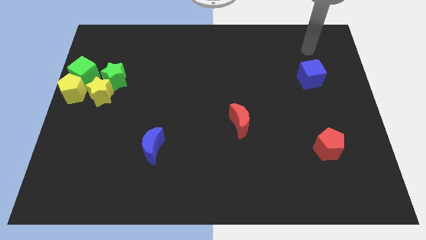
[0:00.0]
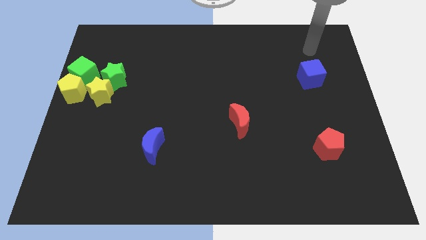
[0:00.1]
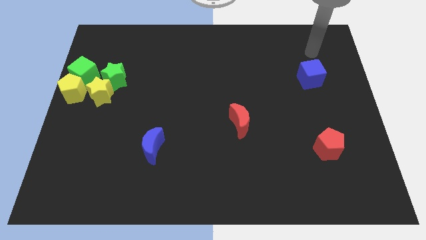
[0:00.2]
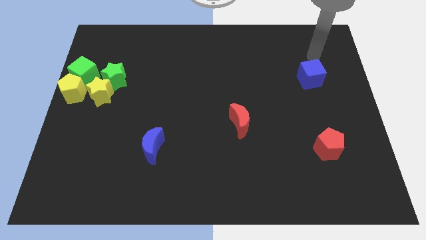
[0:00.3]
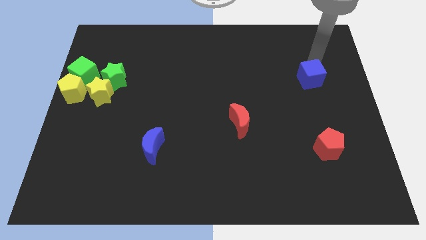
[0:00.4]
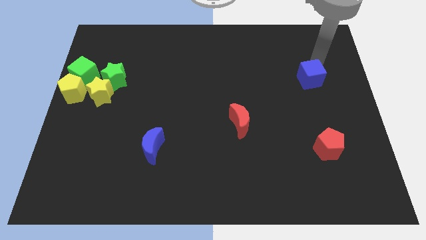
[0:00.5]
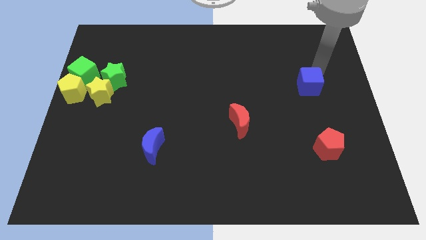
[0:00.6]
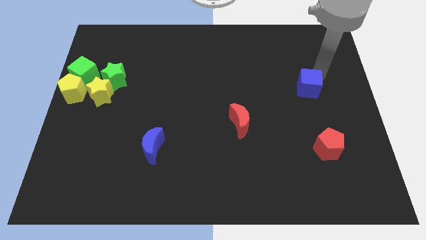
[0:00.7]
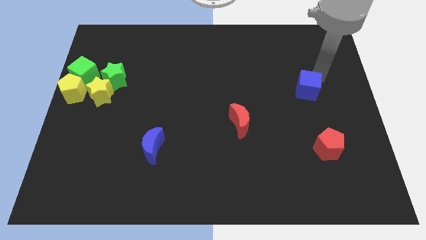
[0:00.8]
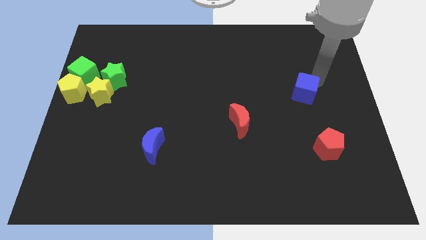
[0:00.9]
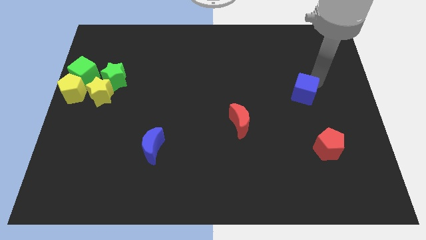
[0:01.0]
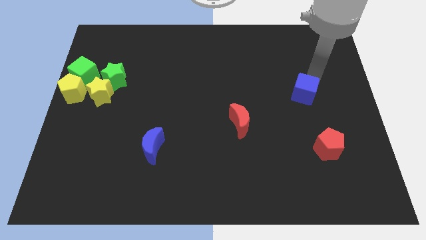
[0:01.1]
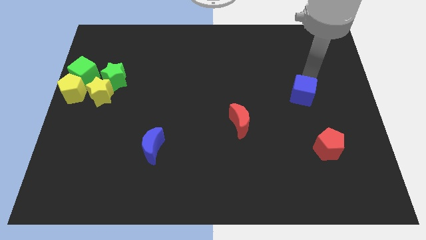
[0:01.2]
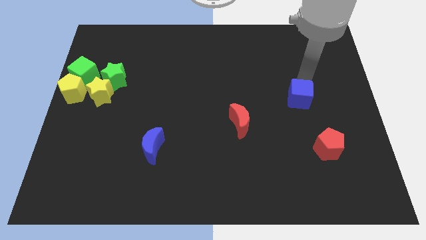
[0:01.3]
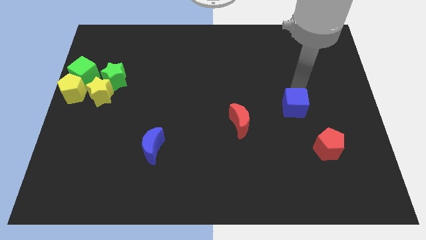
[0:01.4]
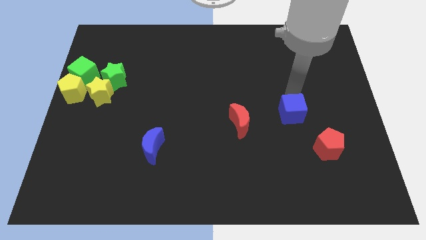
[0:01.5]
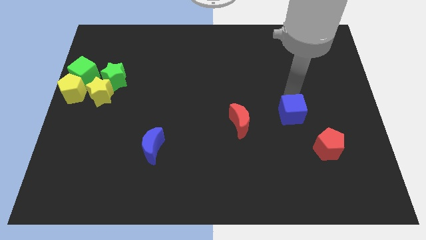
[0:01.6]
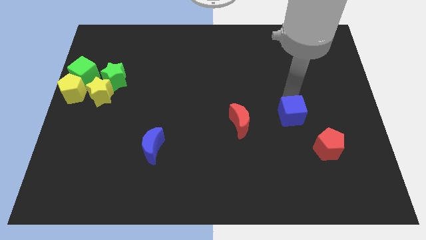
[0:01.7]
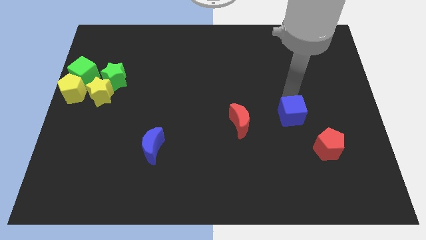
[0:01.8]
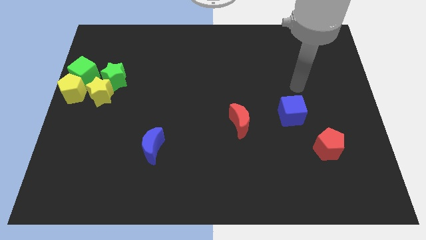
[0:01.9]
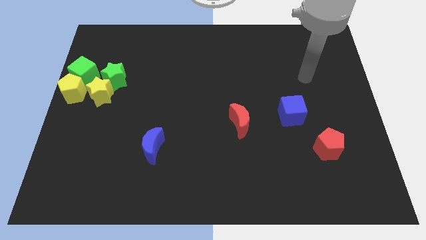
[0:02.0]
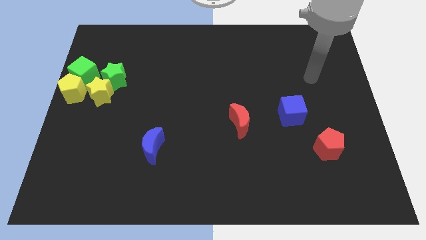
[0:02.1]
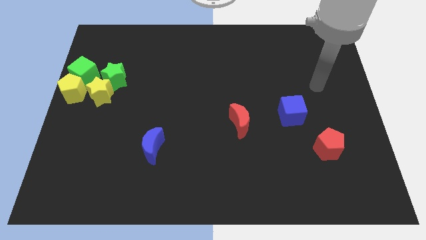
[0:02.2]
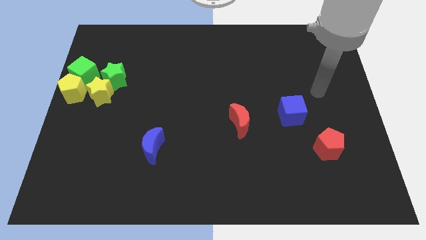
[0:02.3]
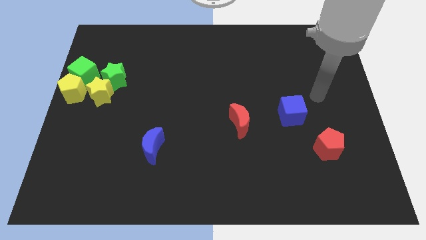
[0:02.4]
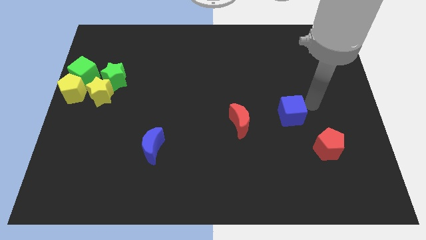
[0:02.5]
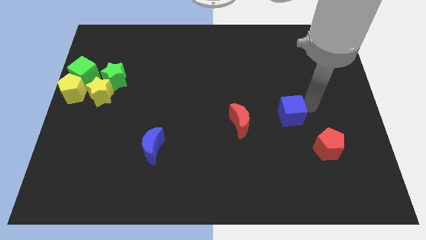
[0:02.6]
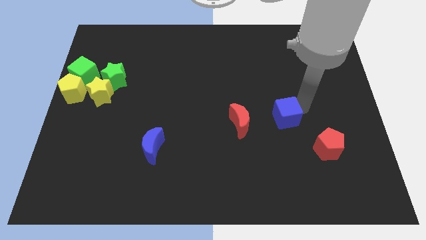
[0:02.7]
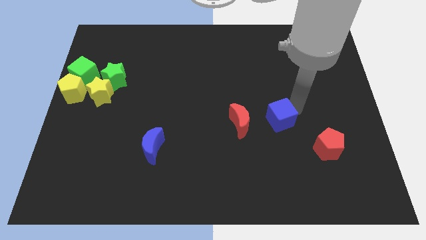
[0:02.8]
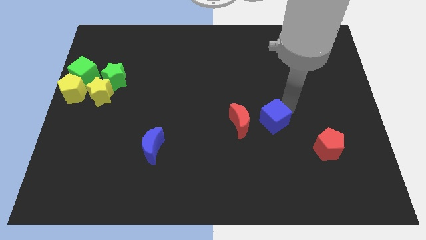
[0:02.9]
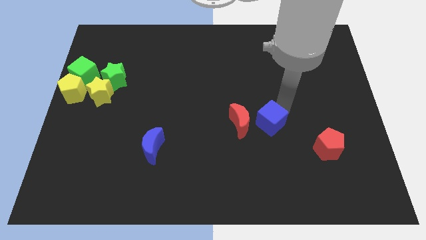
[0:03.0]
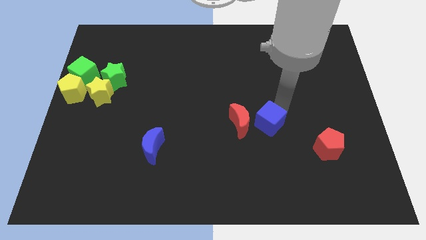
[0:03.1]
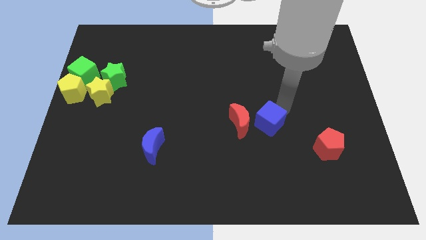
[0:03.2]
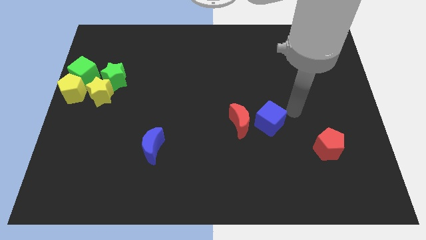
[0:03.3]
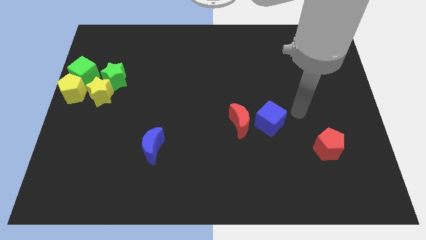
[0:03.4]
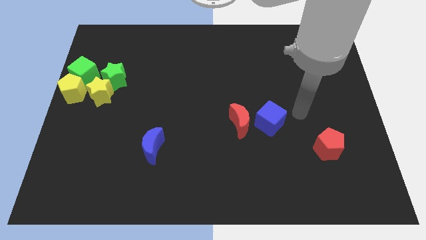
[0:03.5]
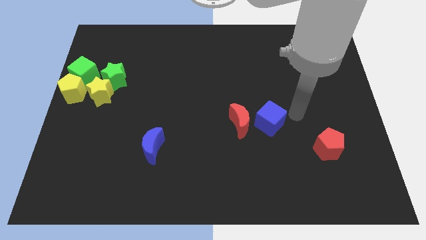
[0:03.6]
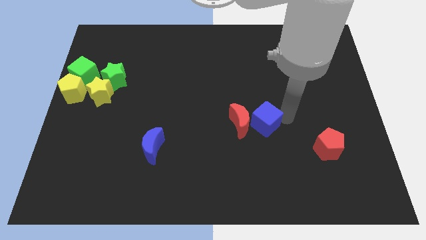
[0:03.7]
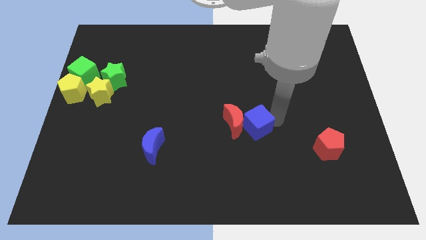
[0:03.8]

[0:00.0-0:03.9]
move the blue cube into the red moon

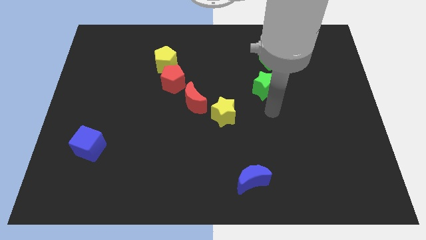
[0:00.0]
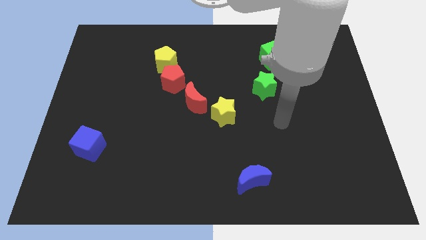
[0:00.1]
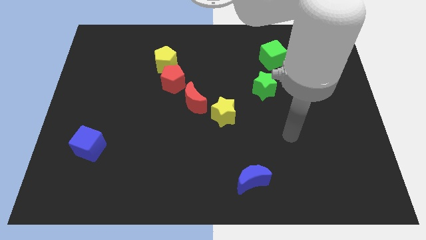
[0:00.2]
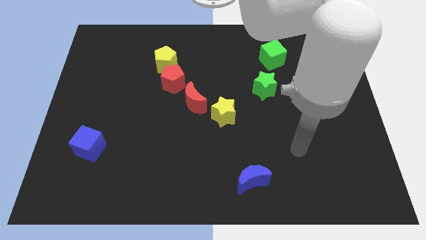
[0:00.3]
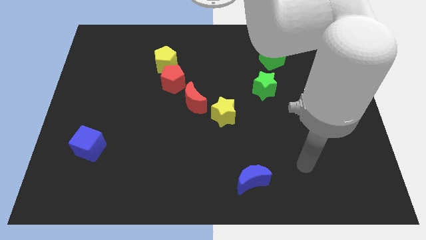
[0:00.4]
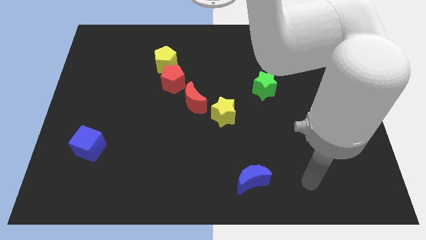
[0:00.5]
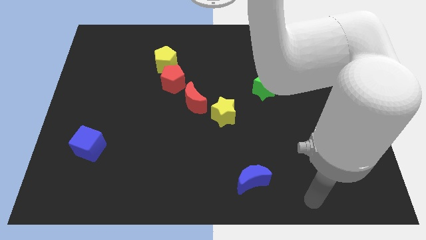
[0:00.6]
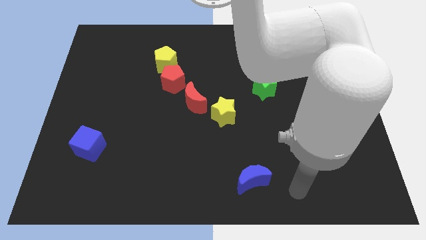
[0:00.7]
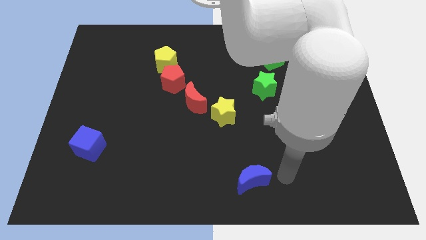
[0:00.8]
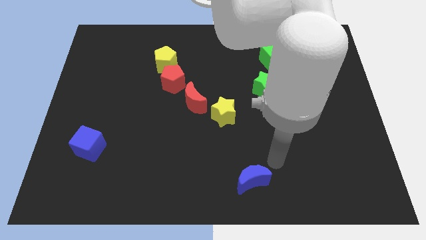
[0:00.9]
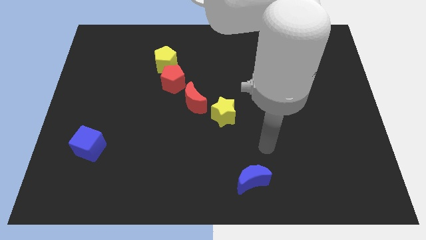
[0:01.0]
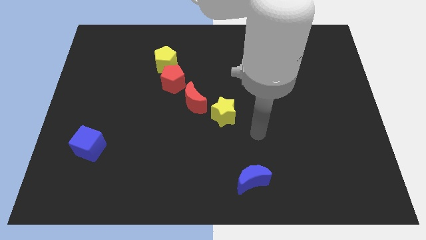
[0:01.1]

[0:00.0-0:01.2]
place your arm to the top side of the blue moon

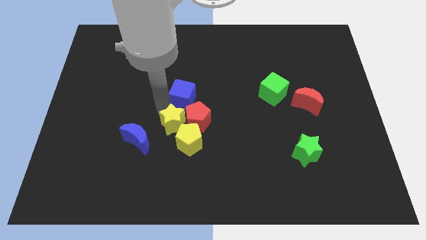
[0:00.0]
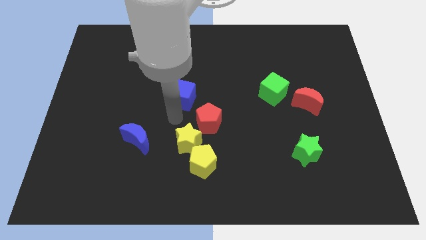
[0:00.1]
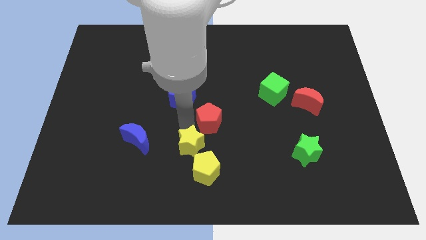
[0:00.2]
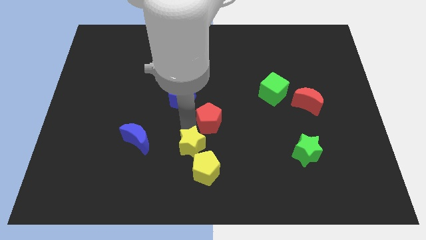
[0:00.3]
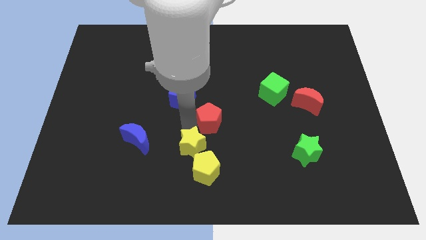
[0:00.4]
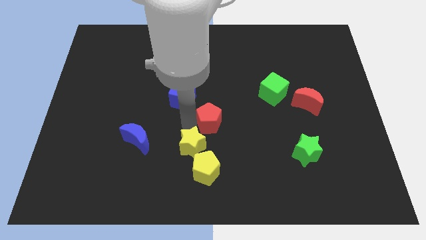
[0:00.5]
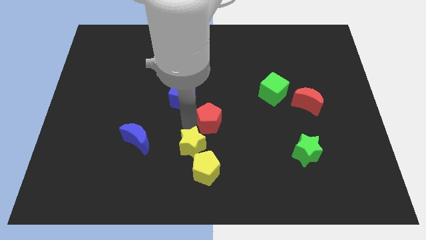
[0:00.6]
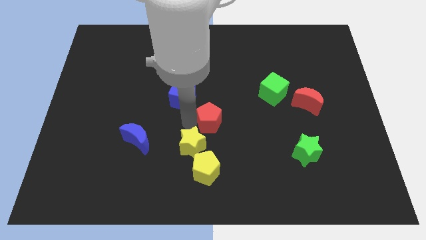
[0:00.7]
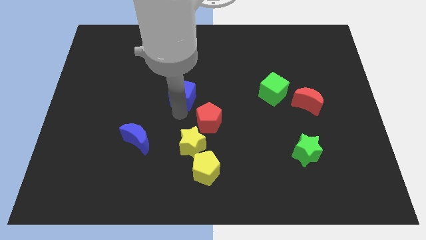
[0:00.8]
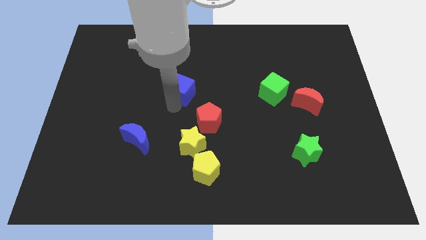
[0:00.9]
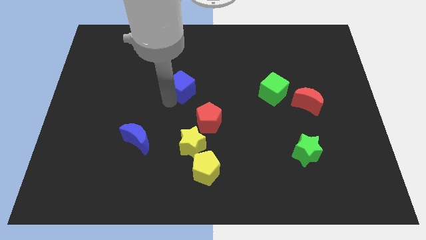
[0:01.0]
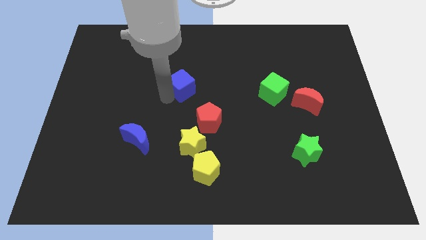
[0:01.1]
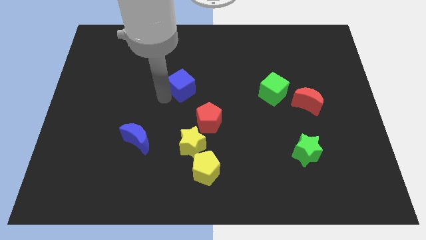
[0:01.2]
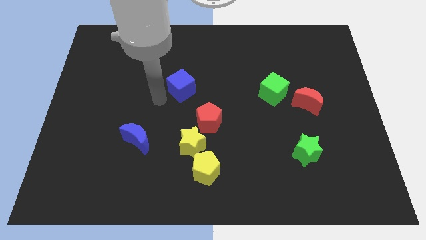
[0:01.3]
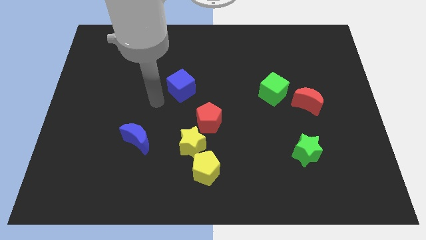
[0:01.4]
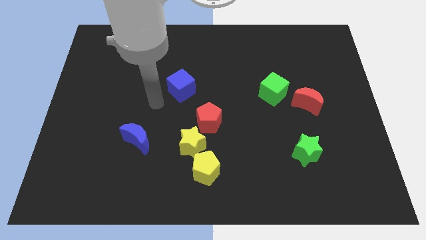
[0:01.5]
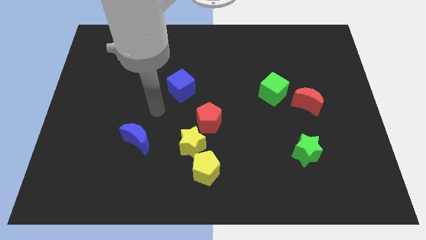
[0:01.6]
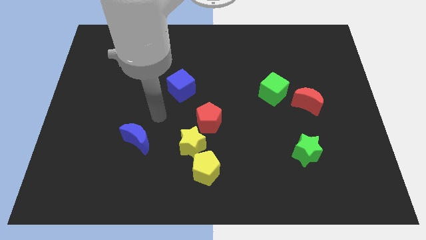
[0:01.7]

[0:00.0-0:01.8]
slightly move the blue cube up

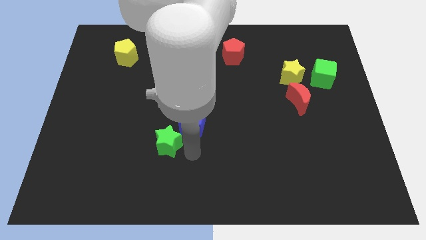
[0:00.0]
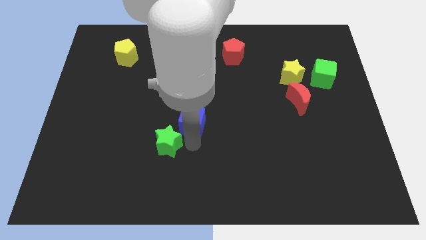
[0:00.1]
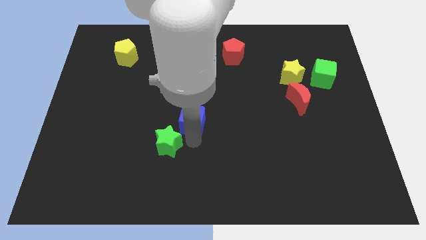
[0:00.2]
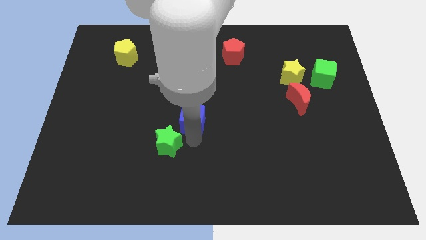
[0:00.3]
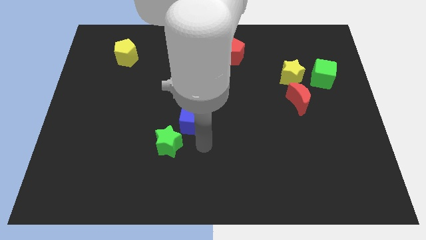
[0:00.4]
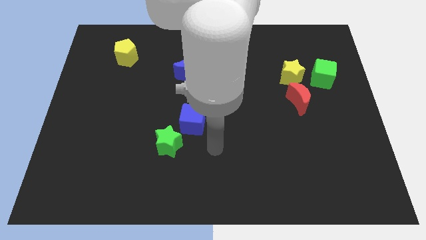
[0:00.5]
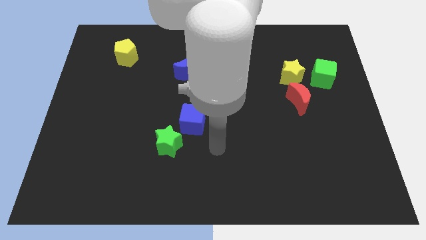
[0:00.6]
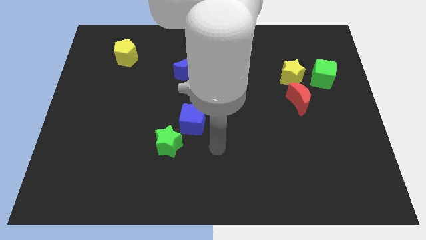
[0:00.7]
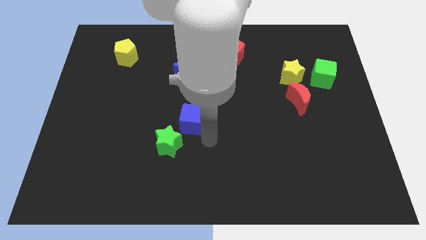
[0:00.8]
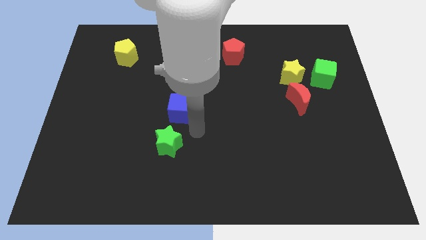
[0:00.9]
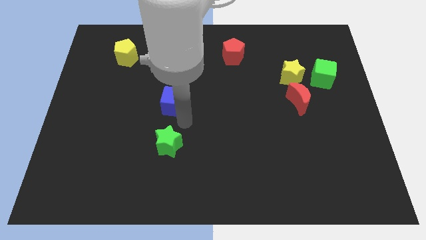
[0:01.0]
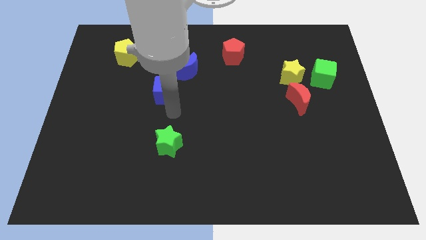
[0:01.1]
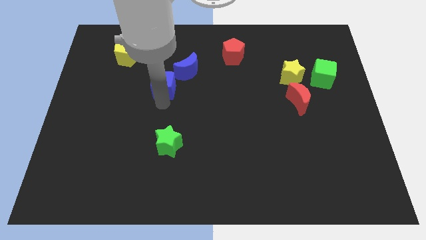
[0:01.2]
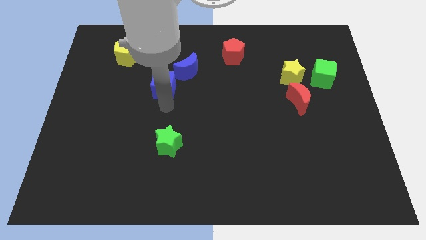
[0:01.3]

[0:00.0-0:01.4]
separate the blue cube from the green star

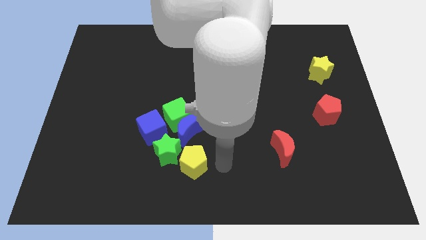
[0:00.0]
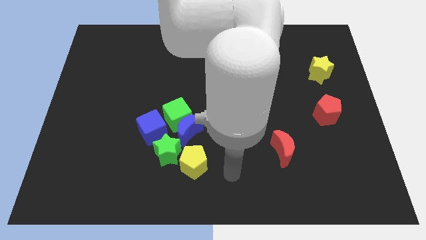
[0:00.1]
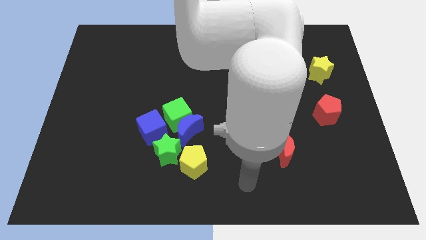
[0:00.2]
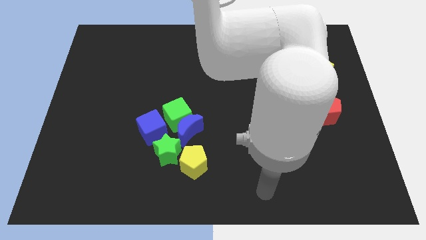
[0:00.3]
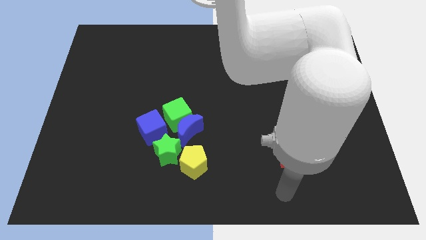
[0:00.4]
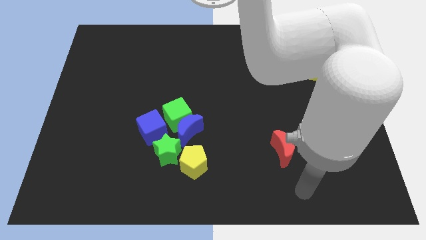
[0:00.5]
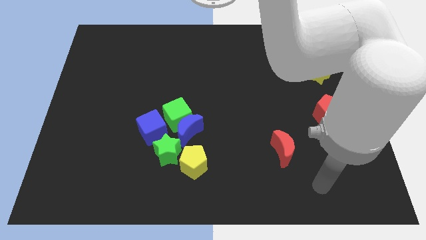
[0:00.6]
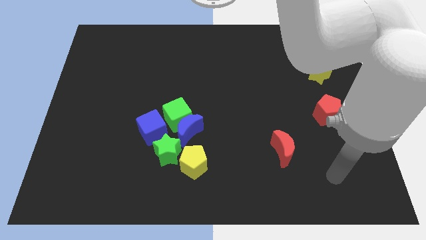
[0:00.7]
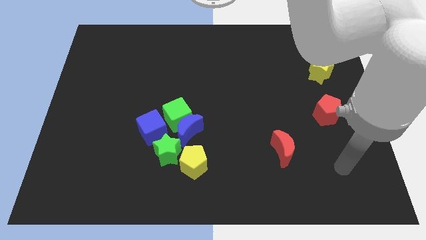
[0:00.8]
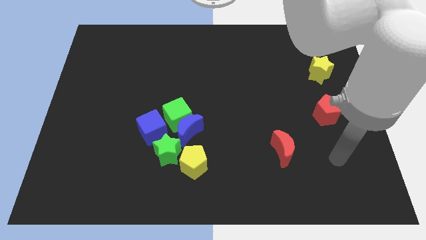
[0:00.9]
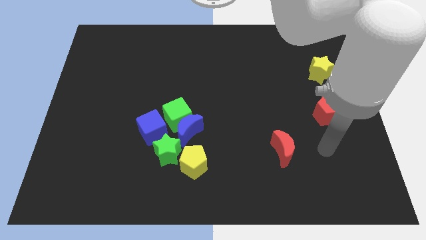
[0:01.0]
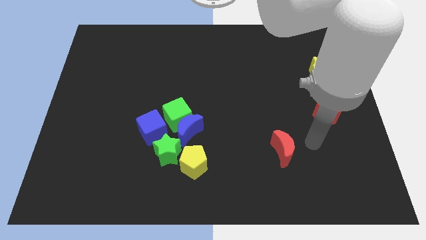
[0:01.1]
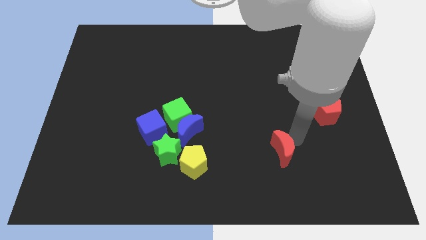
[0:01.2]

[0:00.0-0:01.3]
move your arm towards the red crescent
